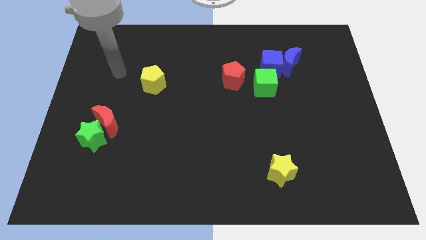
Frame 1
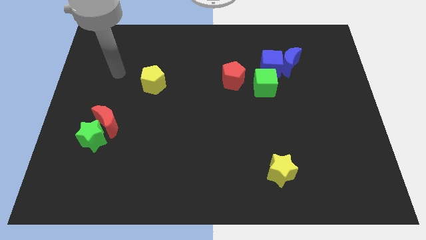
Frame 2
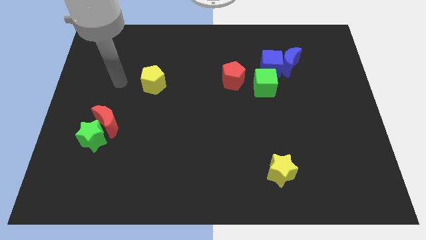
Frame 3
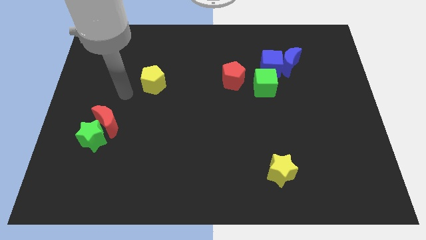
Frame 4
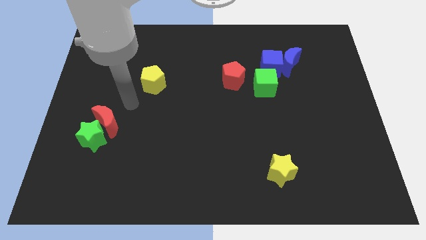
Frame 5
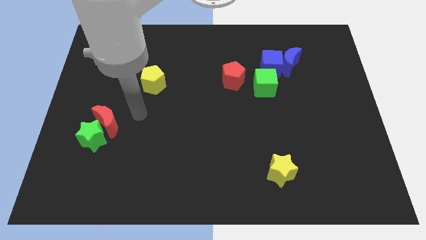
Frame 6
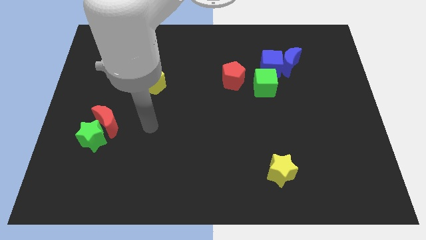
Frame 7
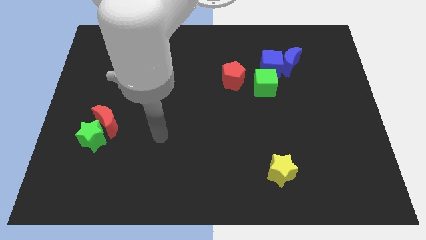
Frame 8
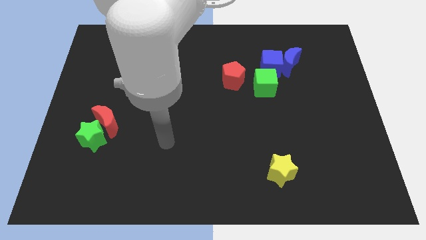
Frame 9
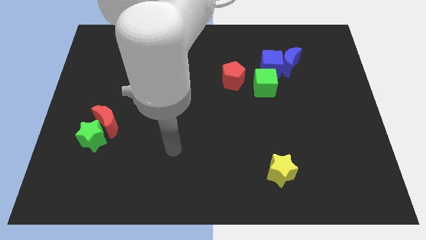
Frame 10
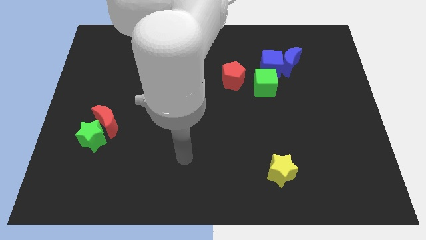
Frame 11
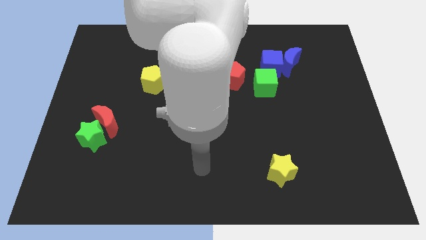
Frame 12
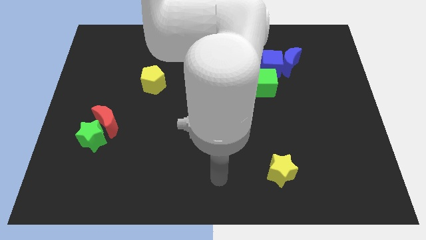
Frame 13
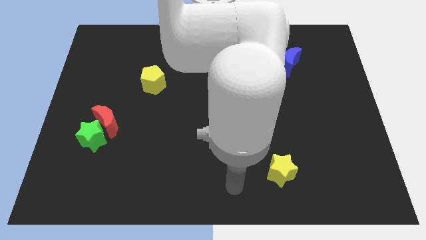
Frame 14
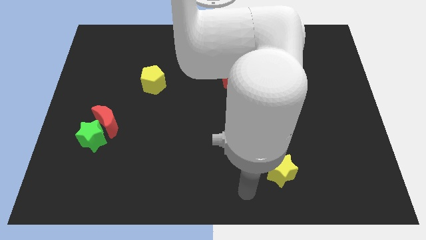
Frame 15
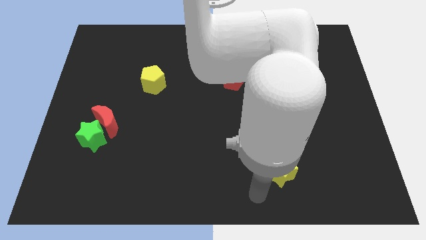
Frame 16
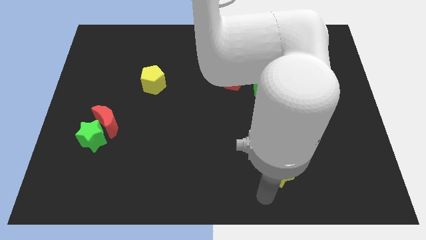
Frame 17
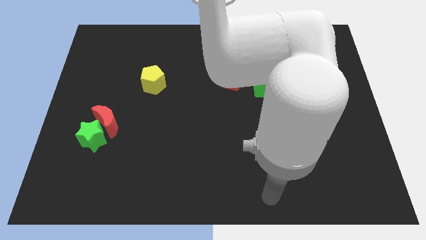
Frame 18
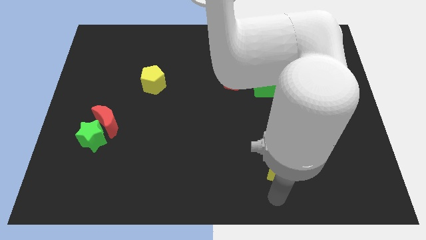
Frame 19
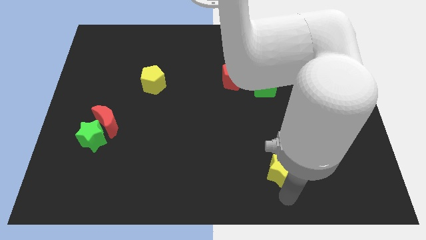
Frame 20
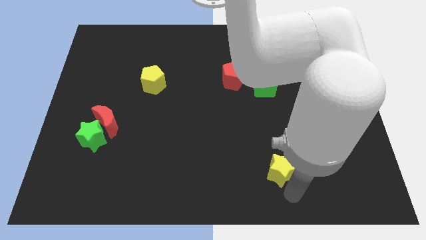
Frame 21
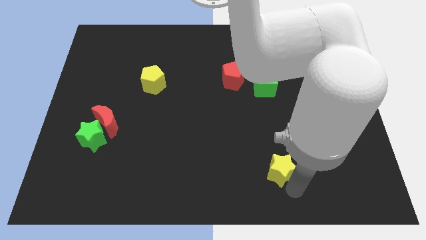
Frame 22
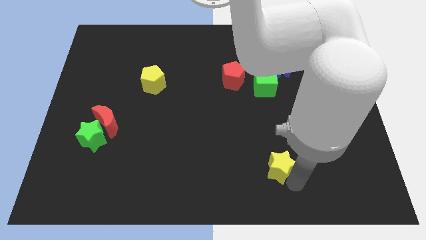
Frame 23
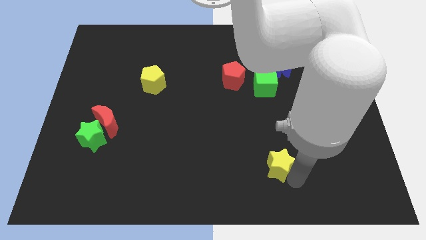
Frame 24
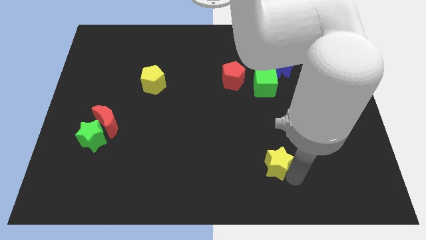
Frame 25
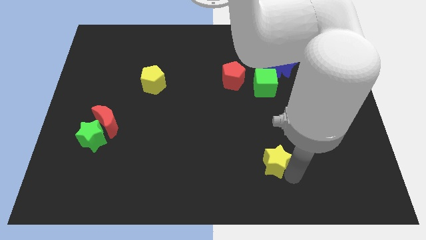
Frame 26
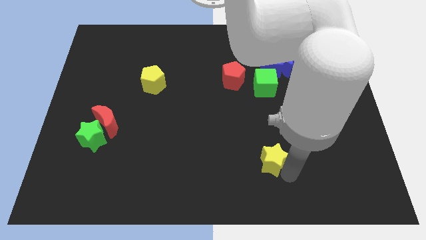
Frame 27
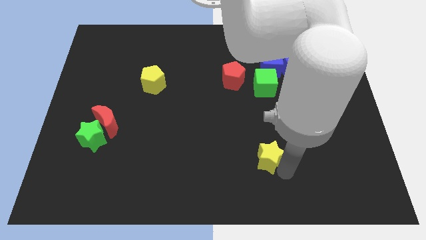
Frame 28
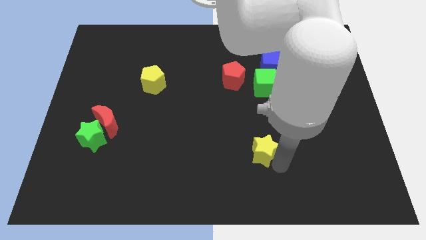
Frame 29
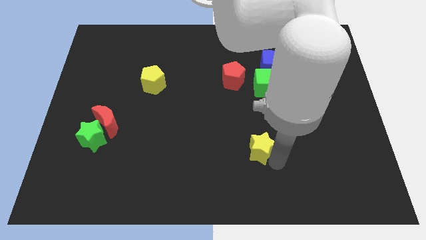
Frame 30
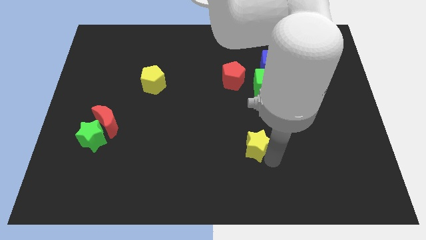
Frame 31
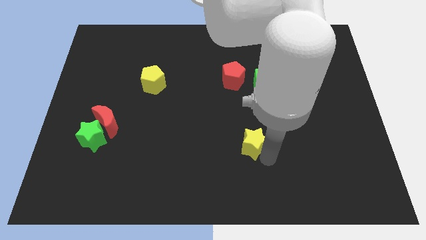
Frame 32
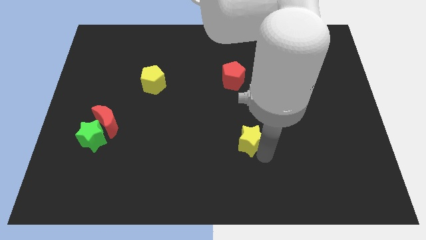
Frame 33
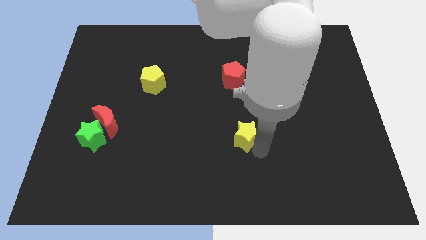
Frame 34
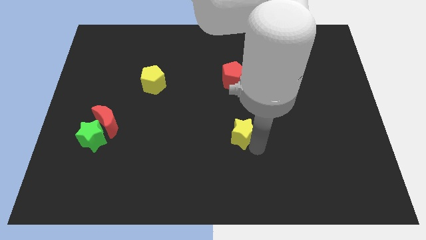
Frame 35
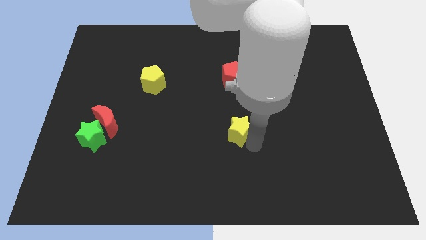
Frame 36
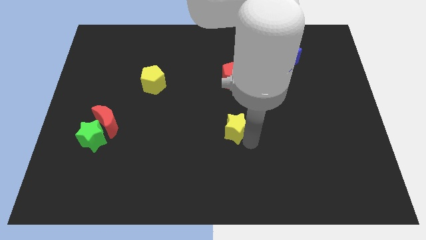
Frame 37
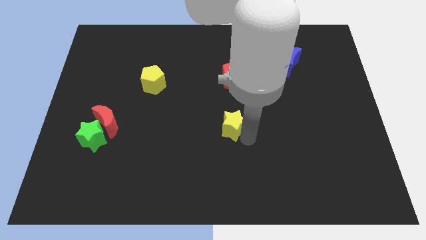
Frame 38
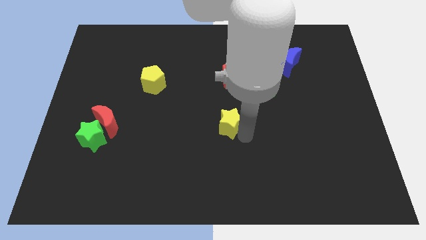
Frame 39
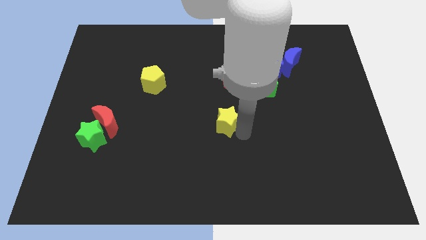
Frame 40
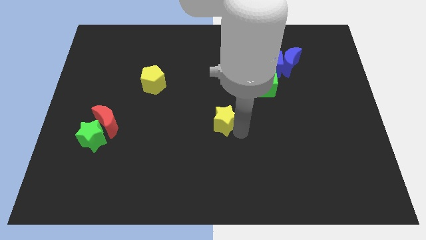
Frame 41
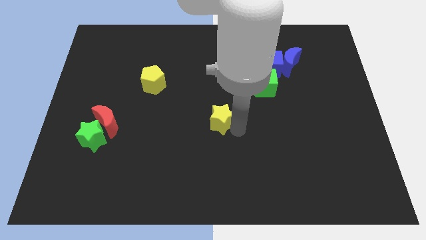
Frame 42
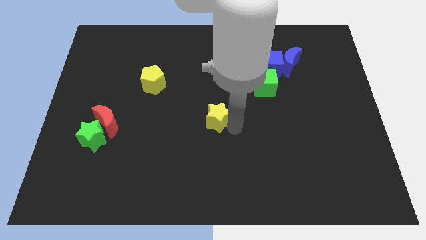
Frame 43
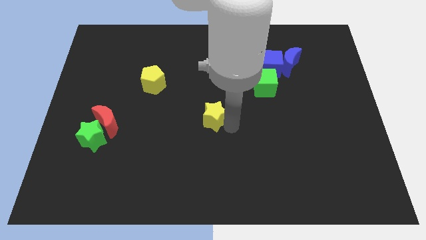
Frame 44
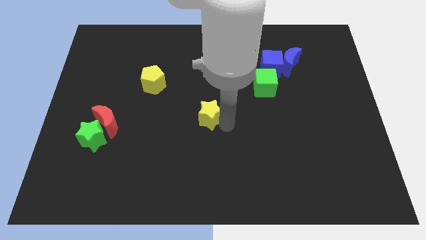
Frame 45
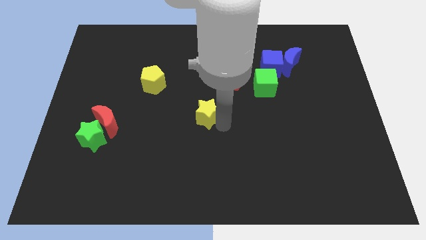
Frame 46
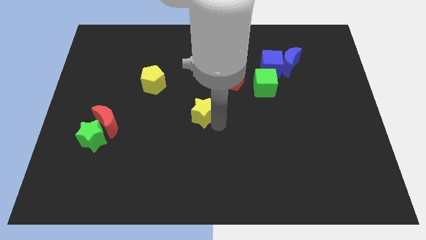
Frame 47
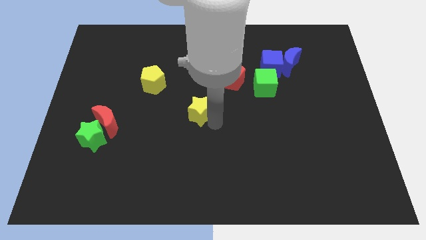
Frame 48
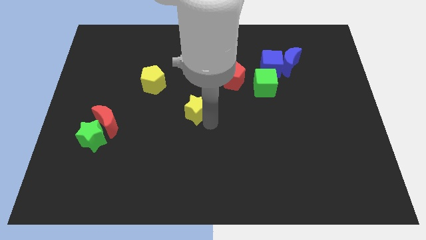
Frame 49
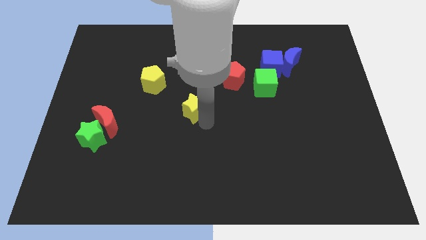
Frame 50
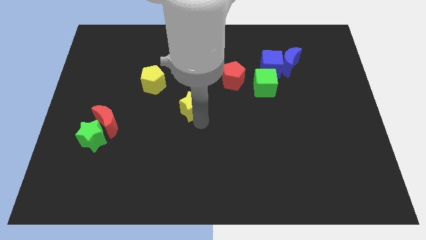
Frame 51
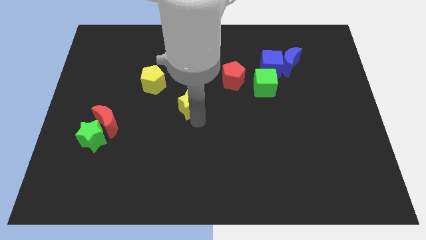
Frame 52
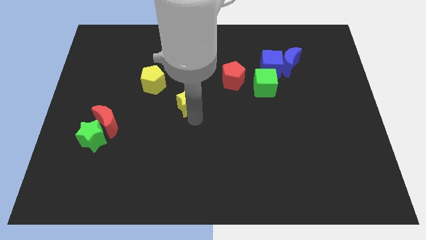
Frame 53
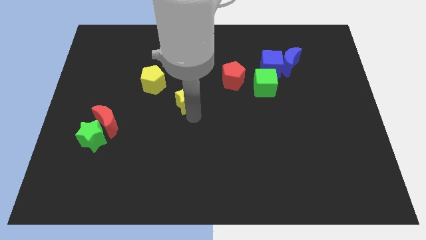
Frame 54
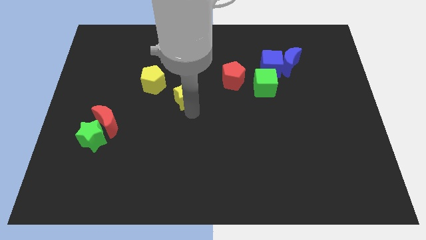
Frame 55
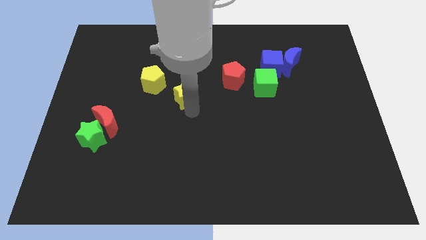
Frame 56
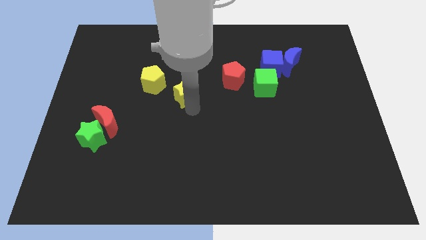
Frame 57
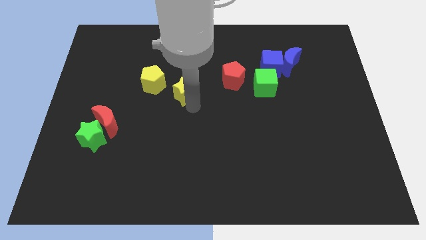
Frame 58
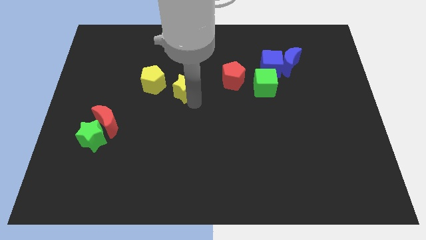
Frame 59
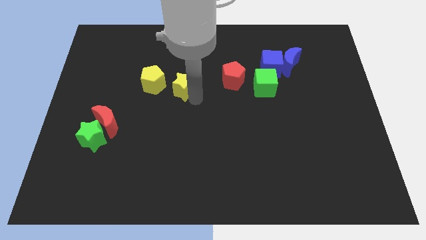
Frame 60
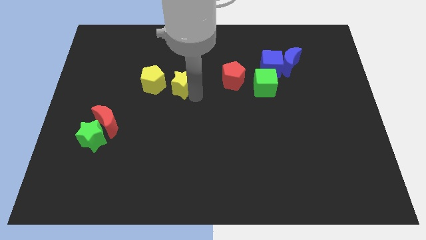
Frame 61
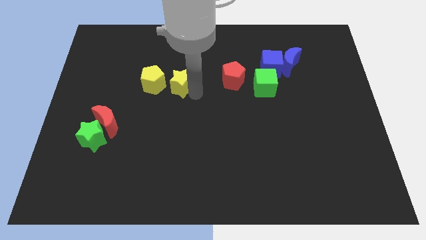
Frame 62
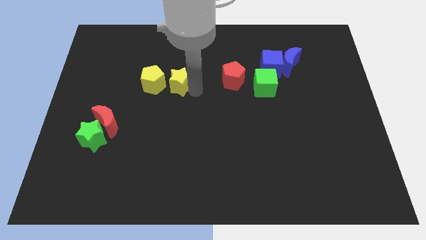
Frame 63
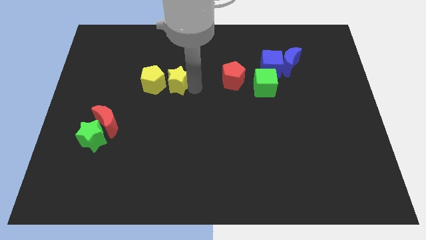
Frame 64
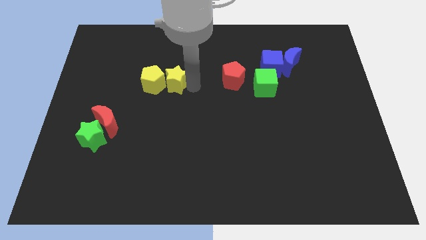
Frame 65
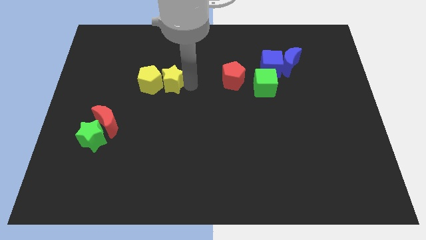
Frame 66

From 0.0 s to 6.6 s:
slide the yellow star next to the yellow pentagon

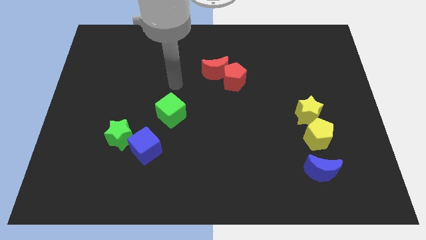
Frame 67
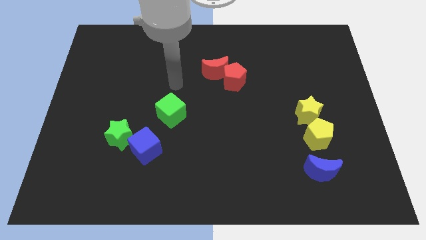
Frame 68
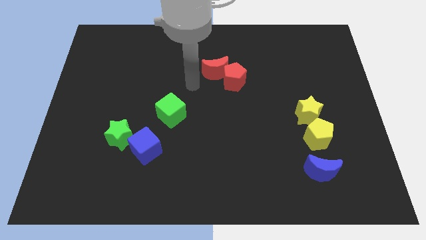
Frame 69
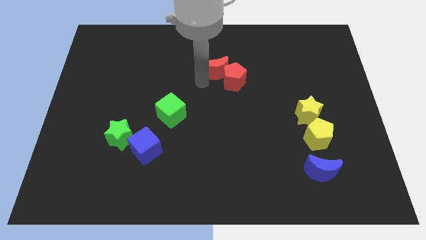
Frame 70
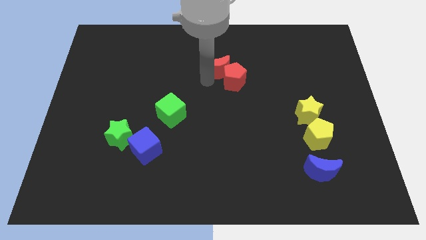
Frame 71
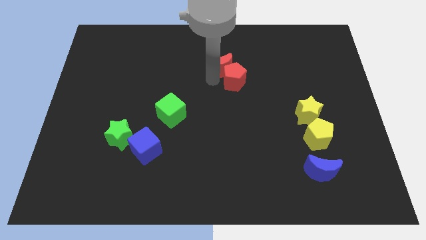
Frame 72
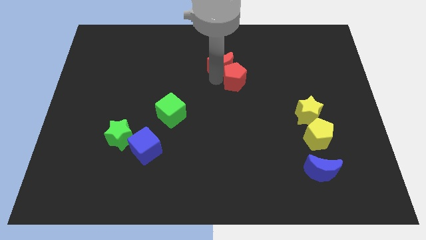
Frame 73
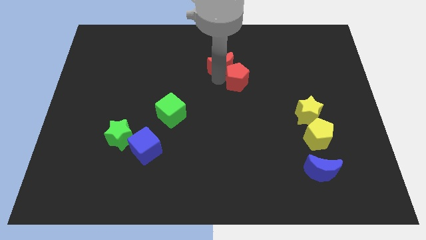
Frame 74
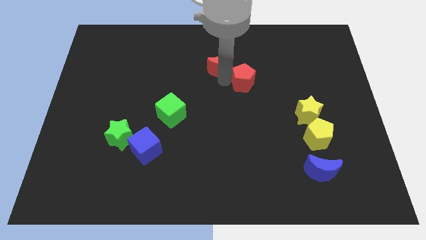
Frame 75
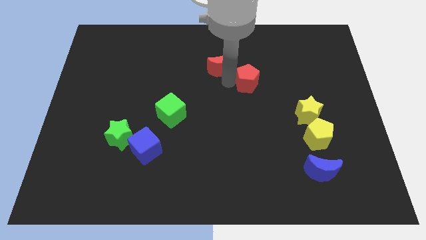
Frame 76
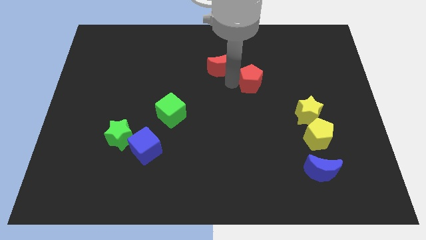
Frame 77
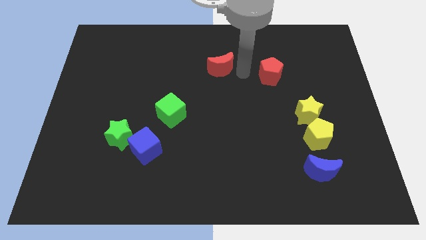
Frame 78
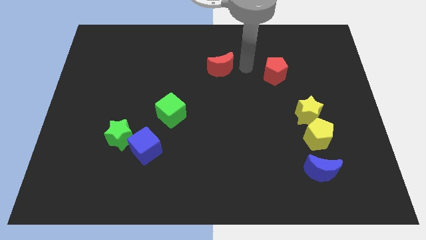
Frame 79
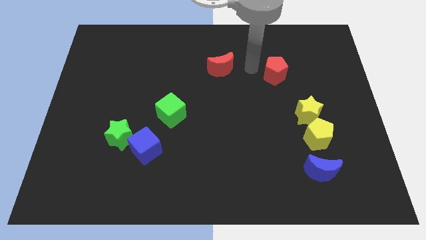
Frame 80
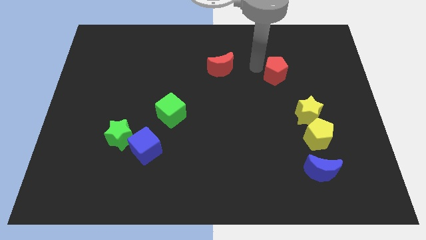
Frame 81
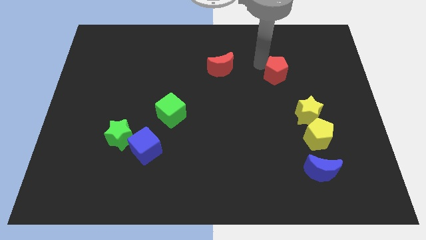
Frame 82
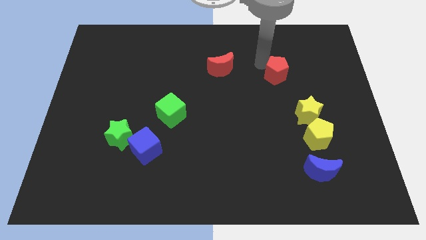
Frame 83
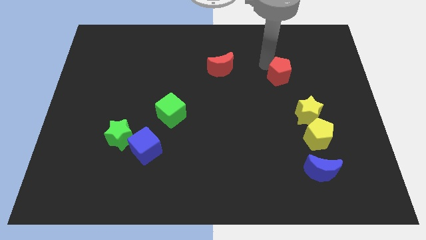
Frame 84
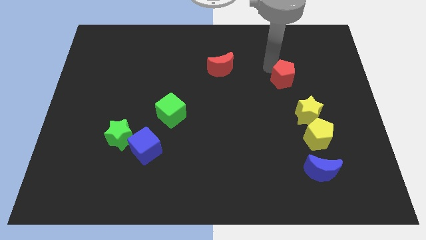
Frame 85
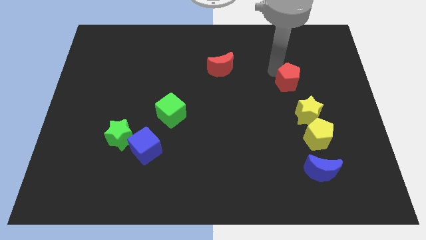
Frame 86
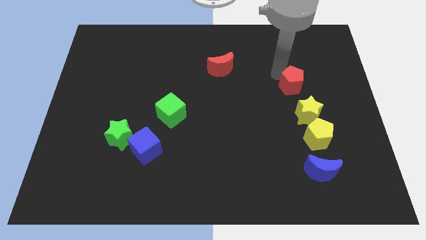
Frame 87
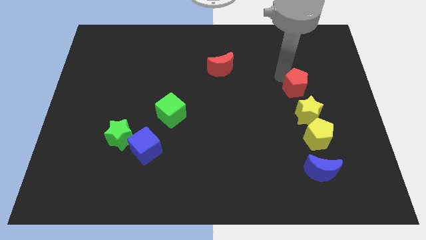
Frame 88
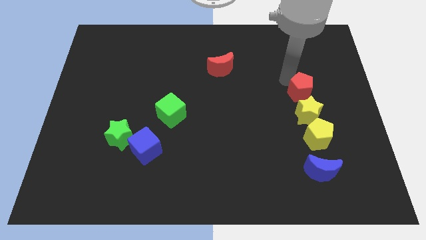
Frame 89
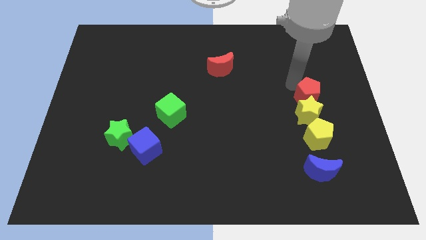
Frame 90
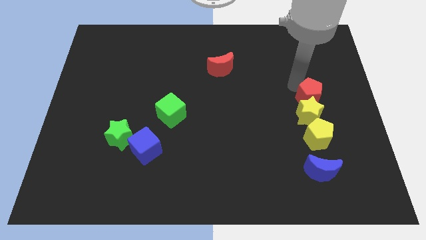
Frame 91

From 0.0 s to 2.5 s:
slide the red pentagon towards the yellow star
